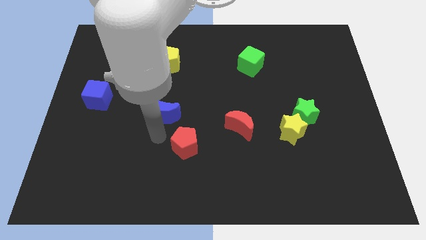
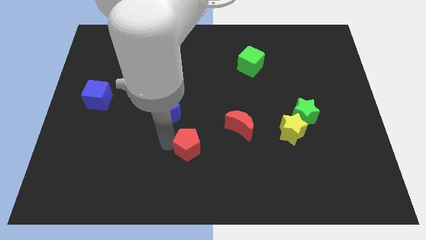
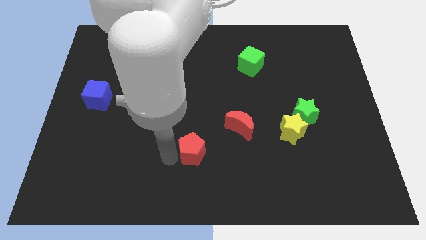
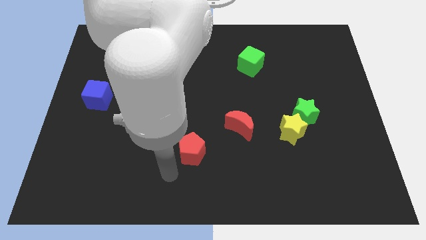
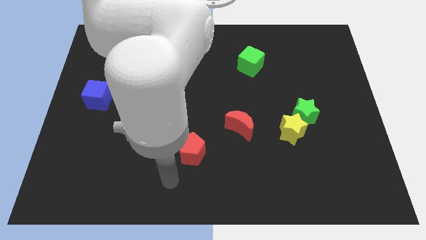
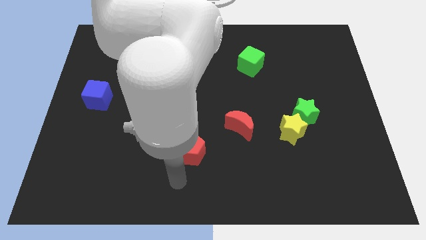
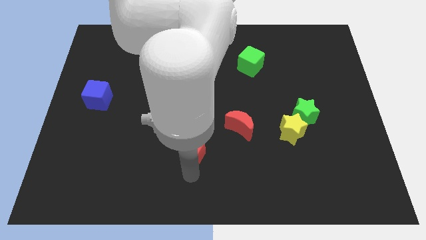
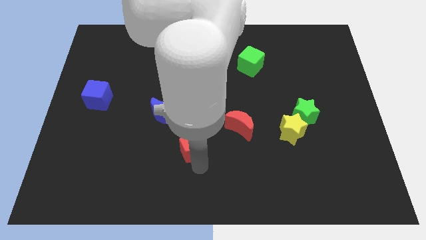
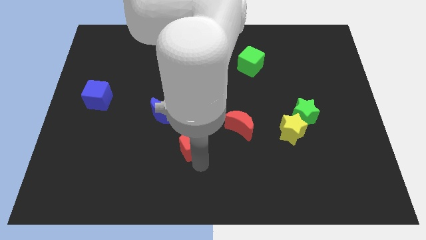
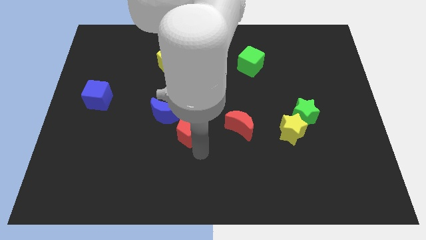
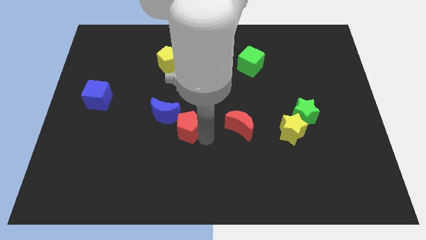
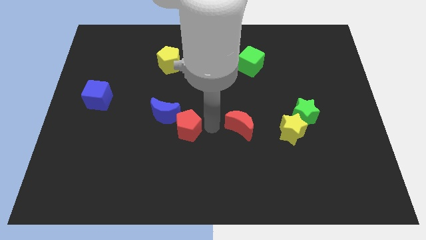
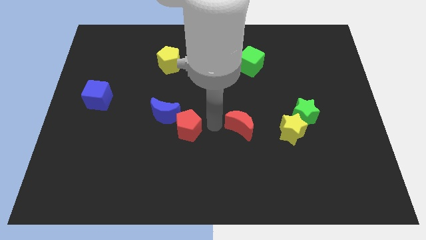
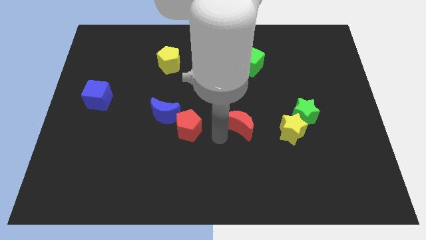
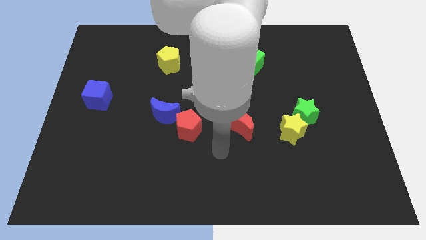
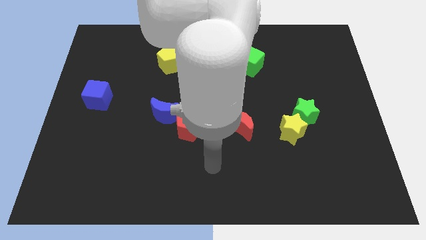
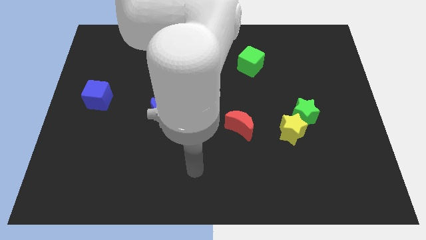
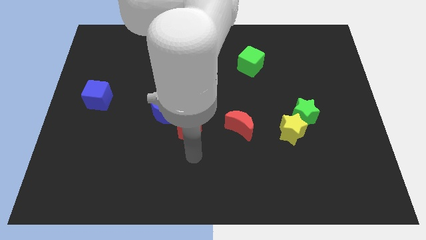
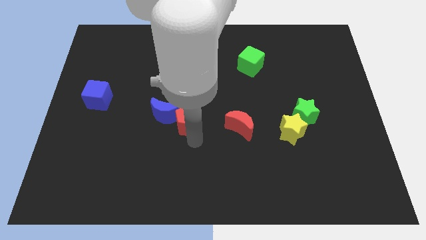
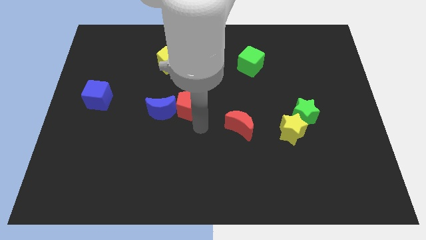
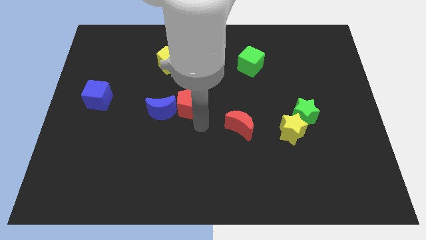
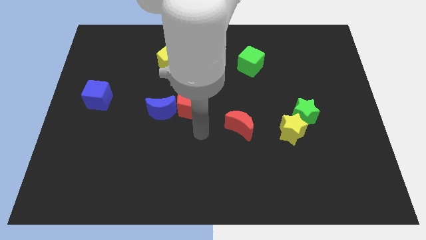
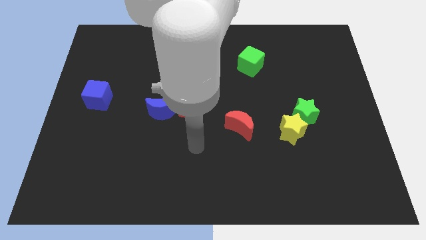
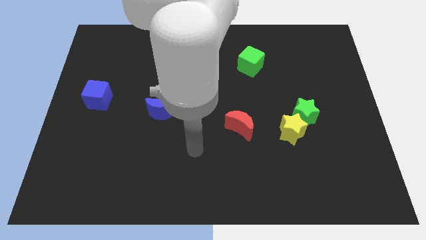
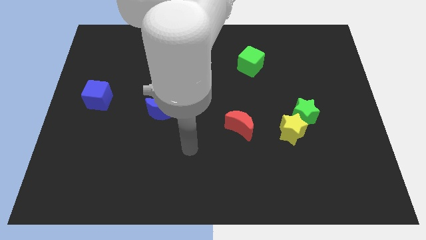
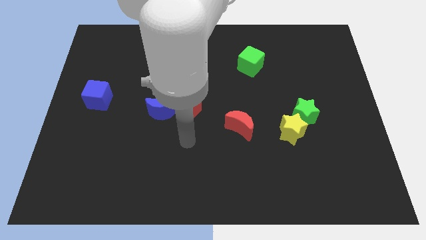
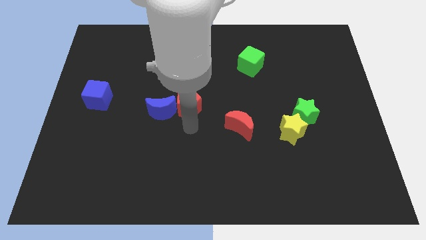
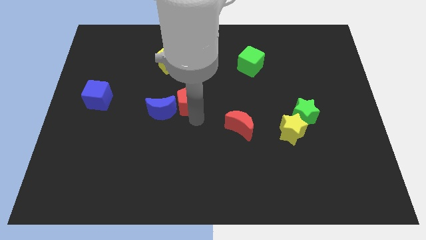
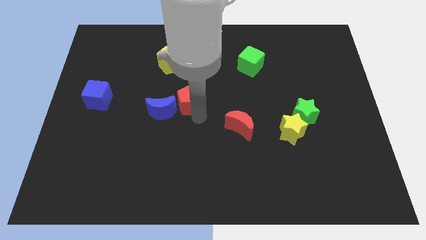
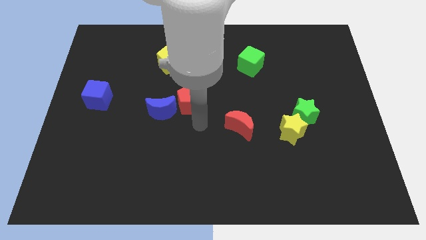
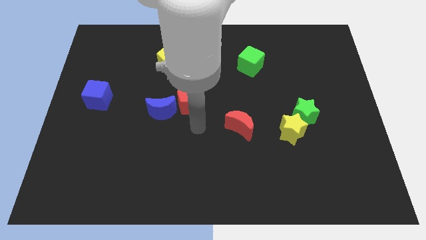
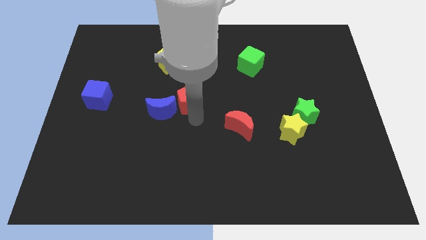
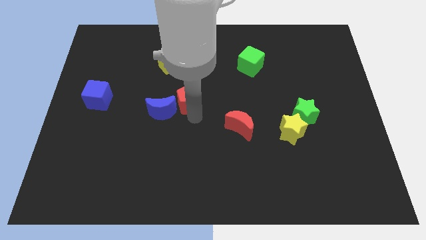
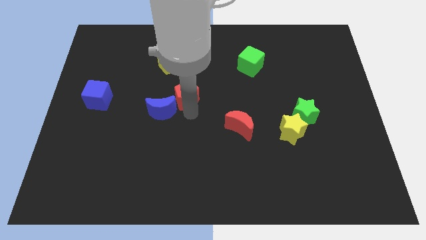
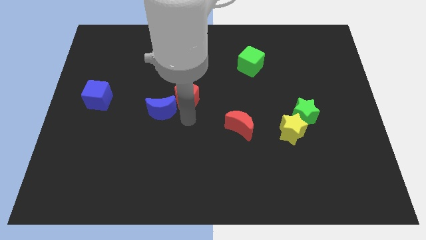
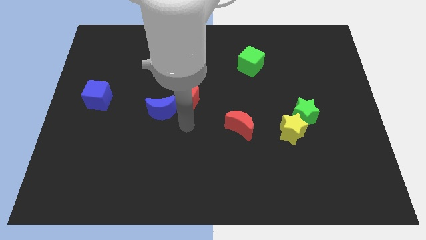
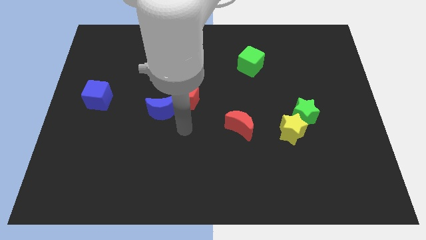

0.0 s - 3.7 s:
move the red pentagon right to the blue crescent

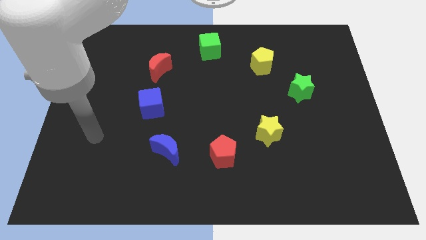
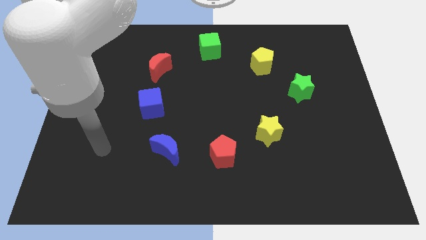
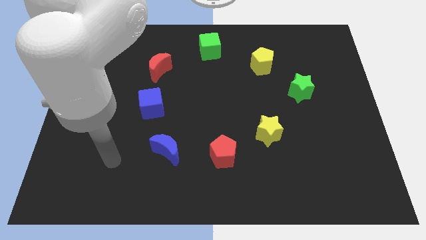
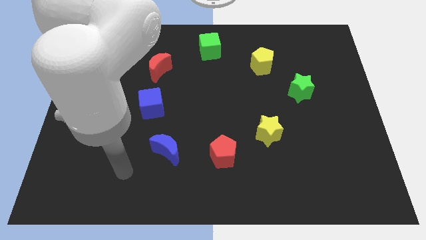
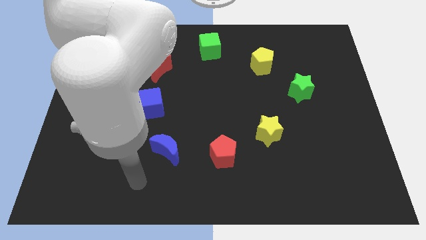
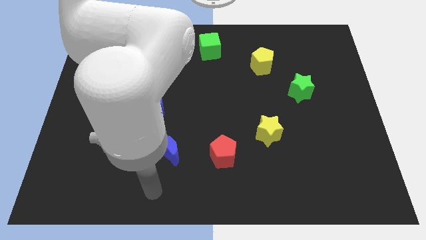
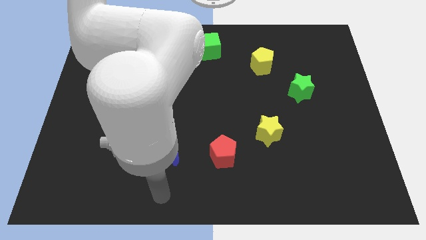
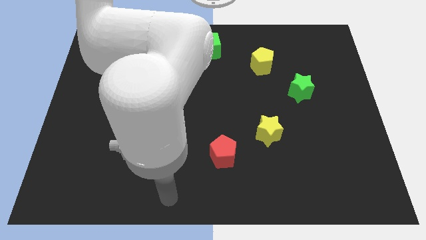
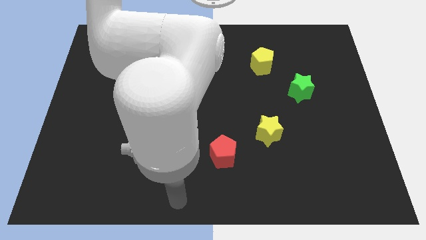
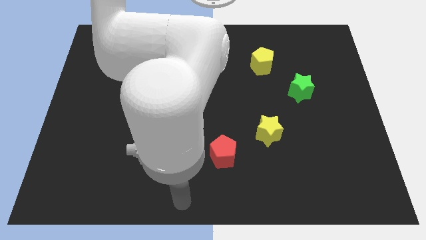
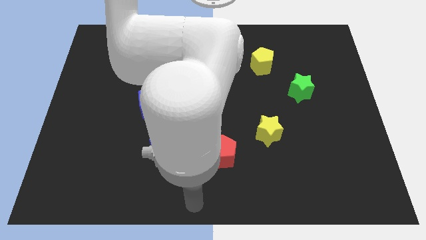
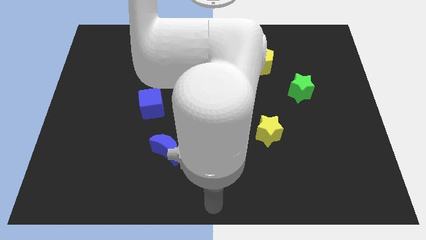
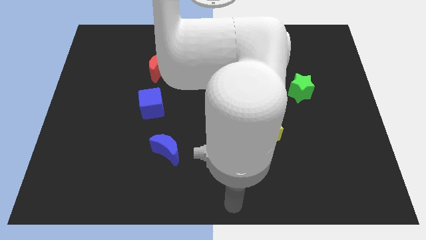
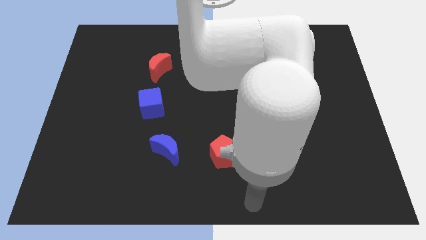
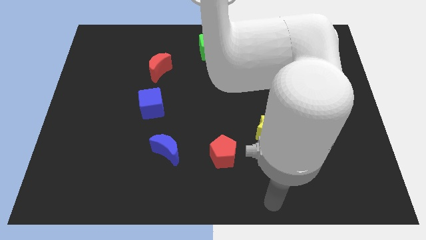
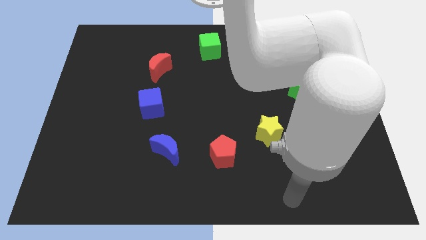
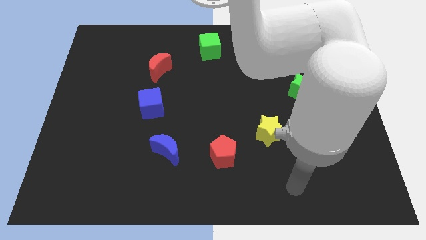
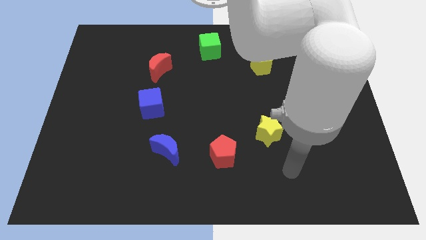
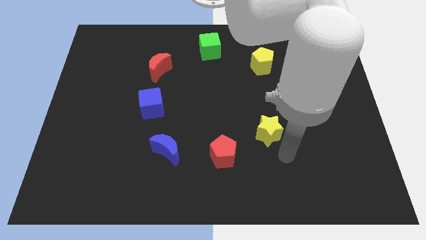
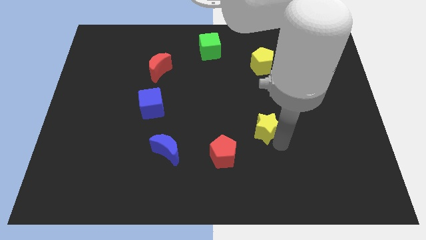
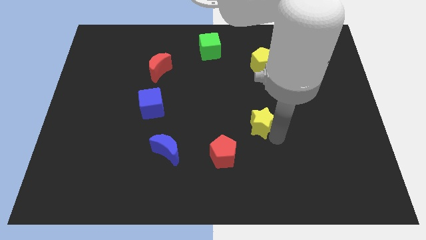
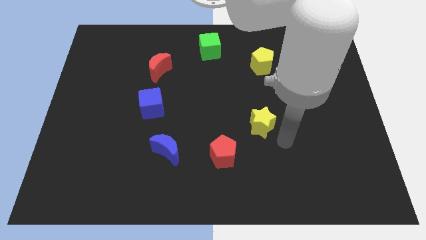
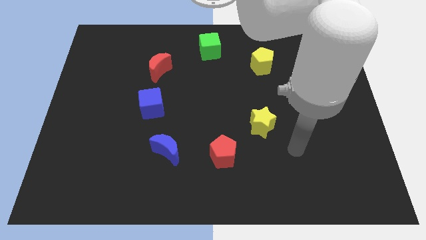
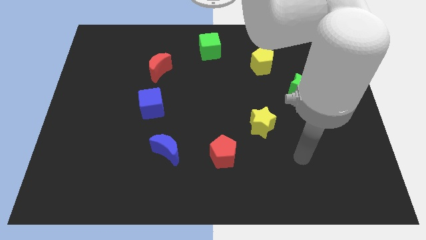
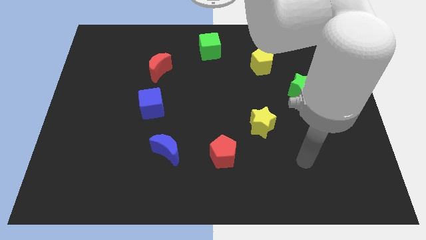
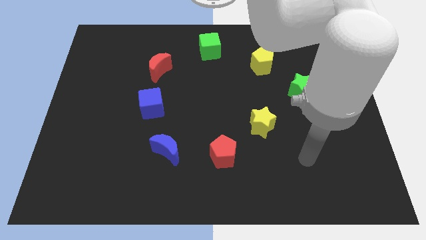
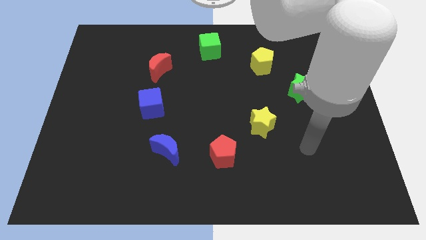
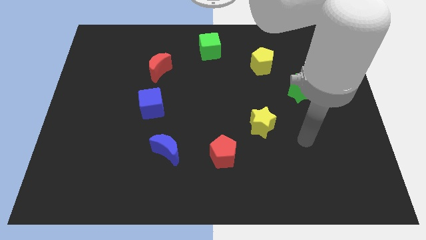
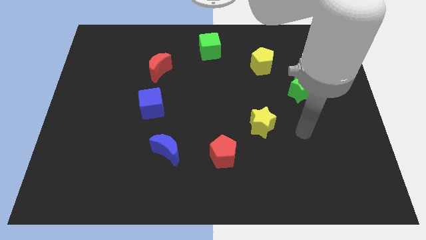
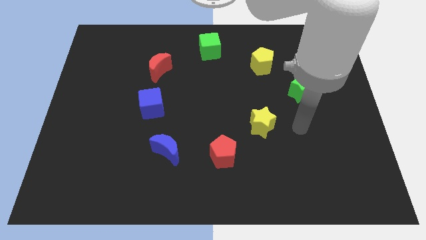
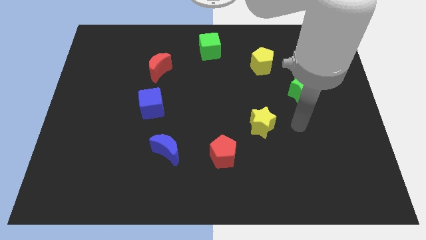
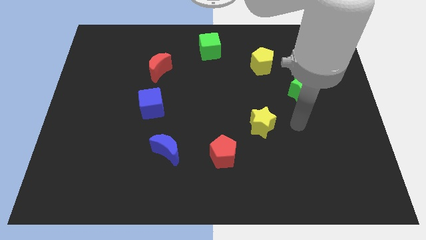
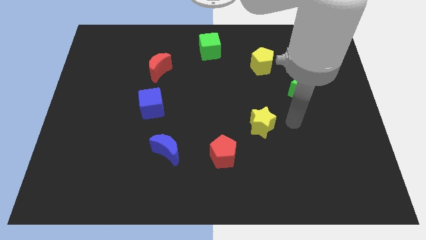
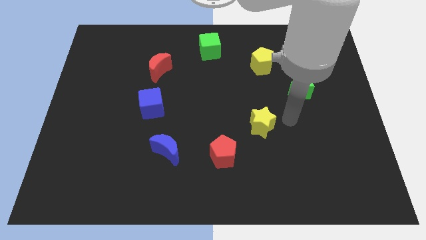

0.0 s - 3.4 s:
slightly move the yellow star to the top

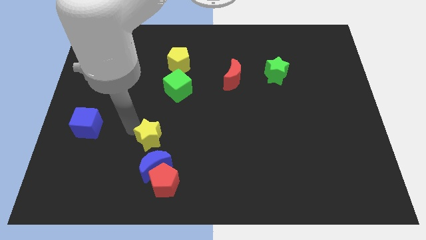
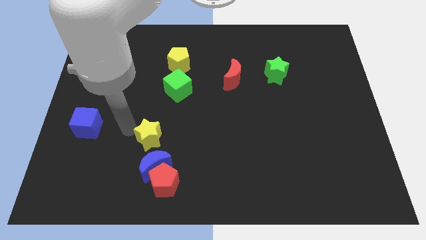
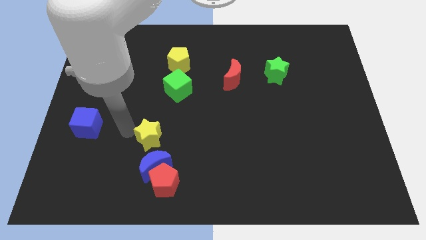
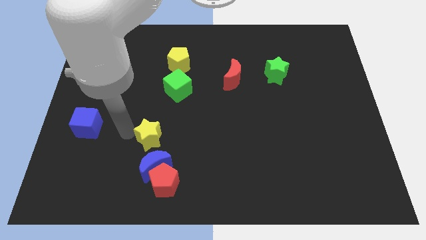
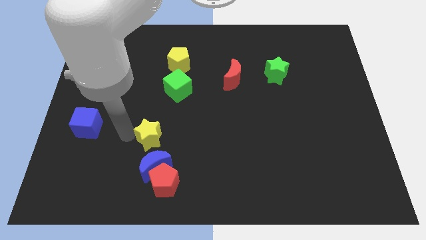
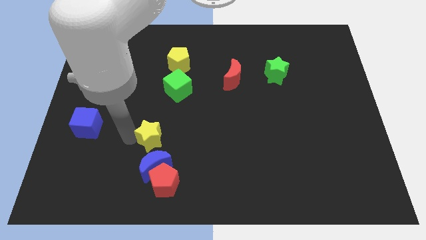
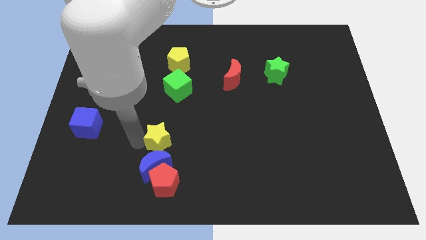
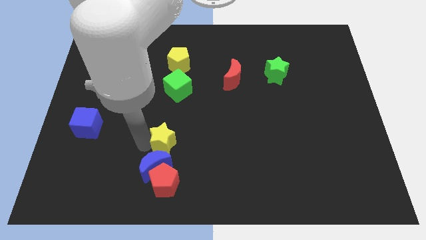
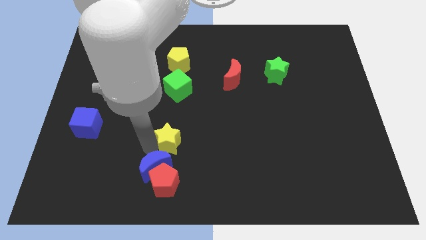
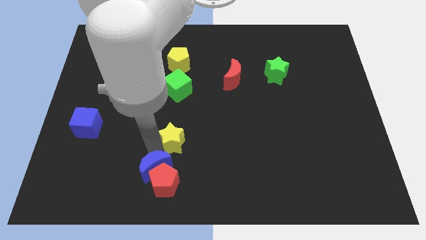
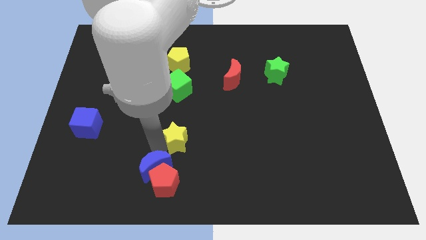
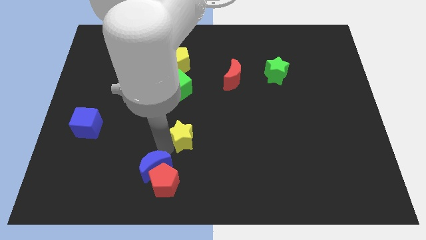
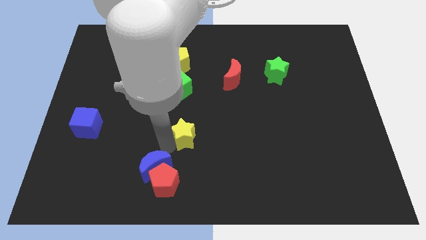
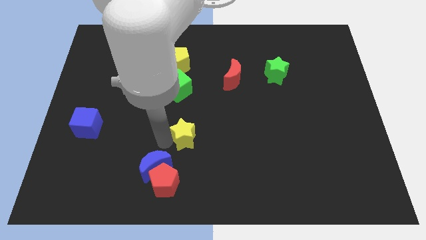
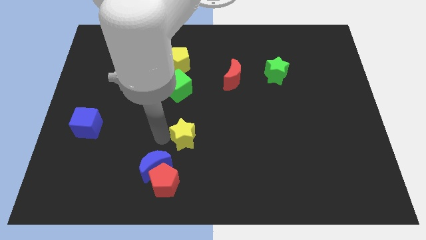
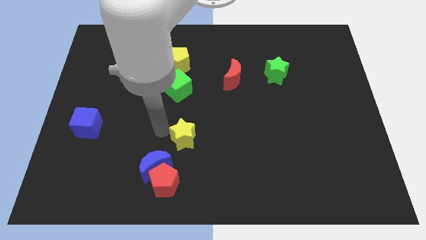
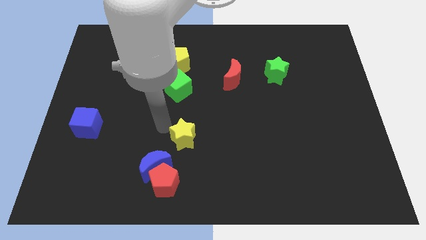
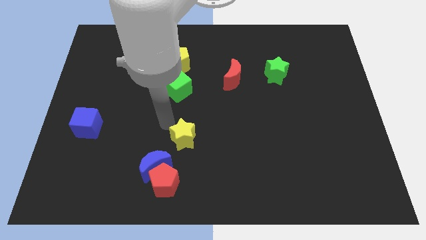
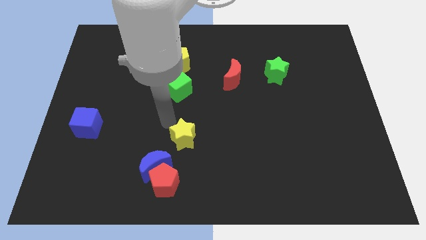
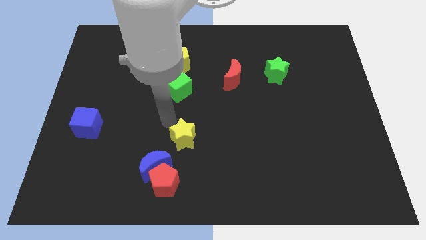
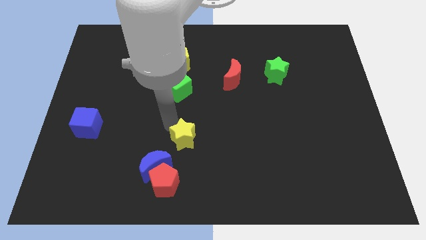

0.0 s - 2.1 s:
slide yellow star to top right of blue moon
